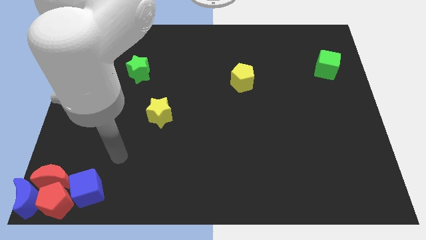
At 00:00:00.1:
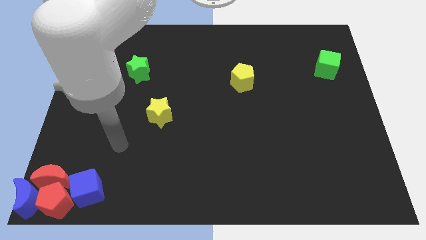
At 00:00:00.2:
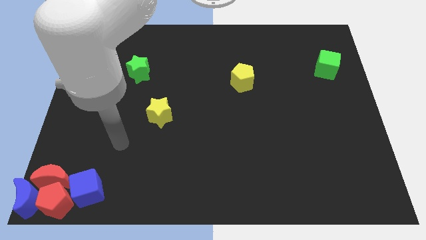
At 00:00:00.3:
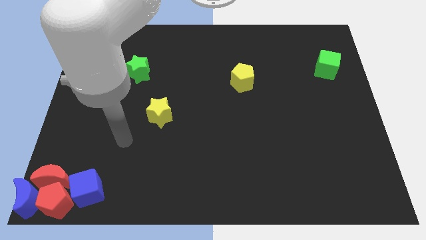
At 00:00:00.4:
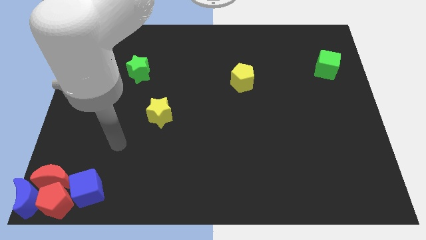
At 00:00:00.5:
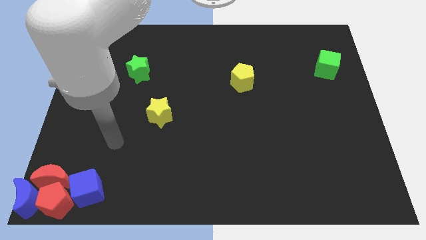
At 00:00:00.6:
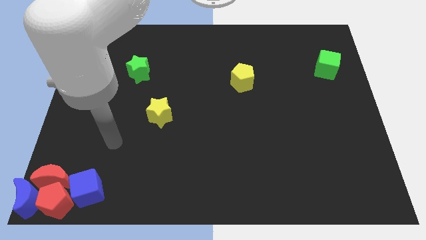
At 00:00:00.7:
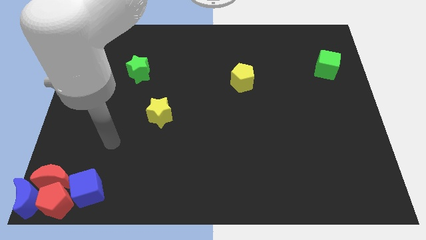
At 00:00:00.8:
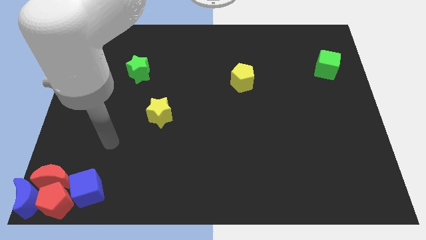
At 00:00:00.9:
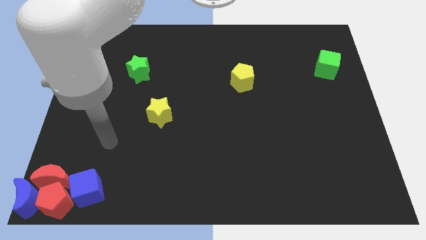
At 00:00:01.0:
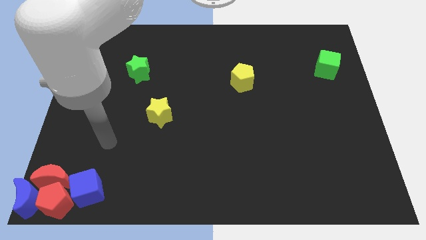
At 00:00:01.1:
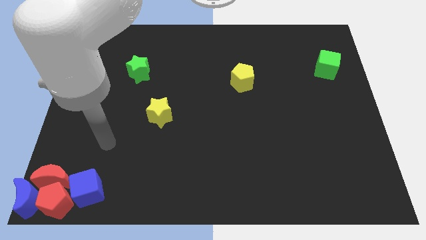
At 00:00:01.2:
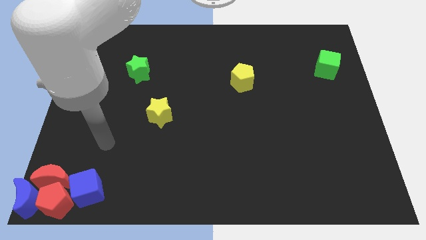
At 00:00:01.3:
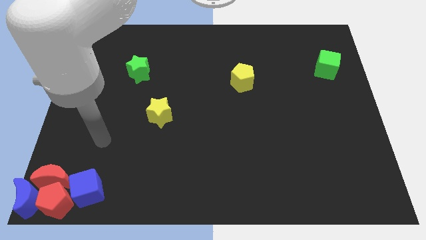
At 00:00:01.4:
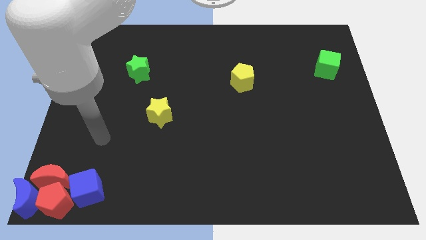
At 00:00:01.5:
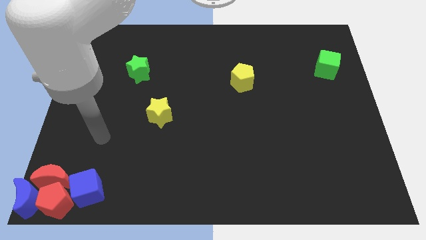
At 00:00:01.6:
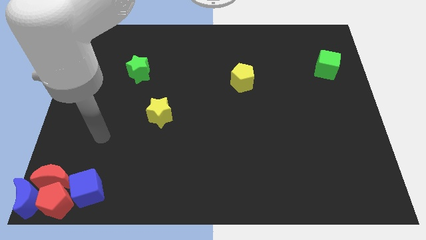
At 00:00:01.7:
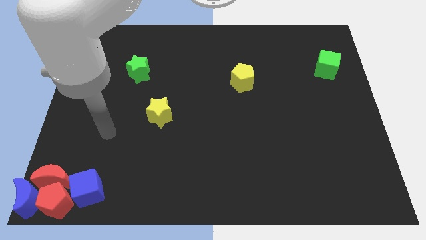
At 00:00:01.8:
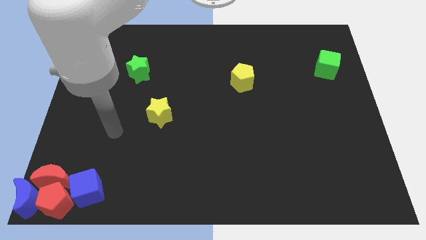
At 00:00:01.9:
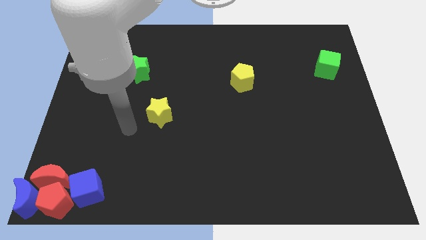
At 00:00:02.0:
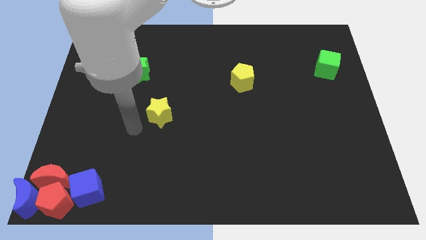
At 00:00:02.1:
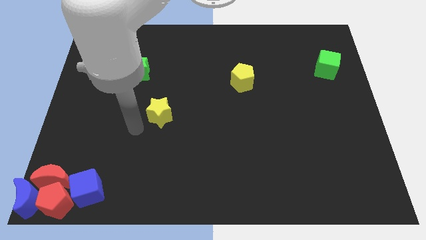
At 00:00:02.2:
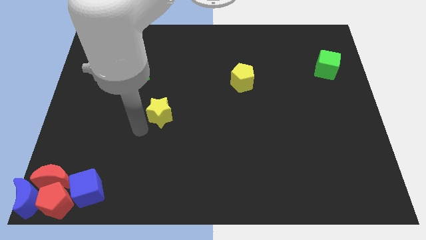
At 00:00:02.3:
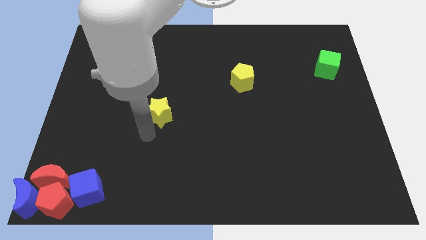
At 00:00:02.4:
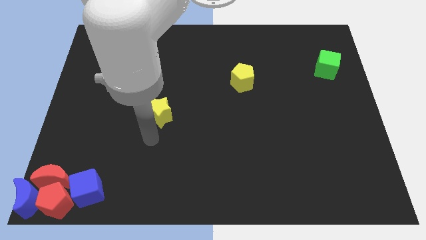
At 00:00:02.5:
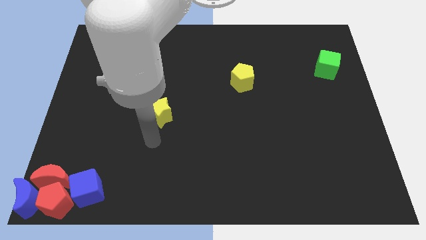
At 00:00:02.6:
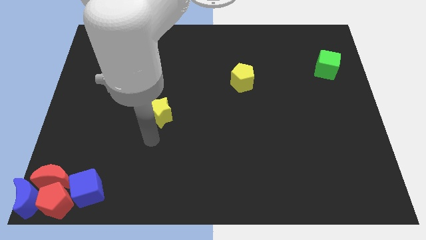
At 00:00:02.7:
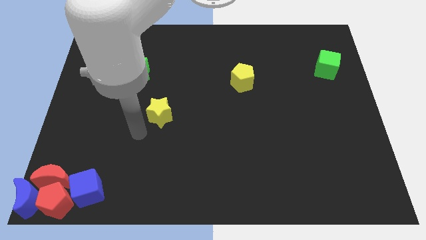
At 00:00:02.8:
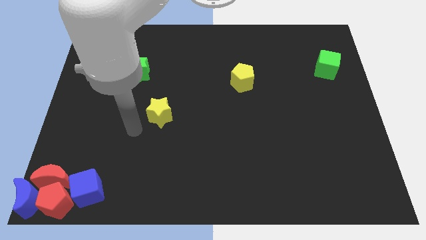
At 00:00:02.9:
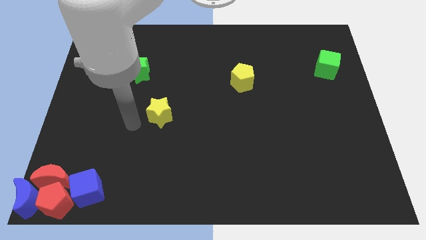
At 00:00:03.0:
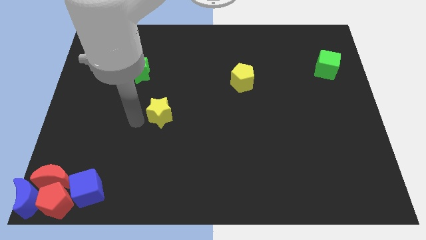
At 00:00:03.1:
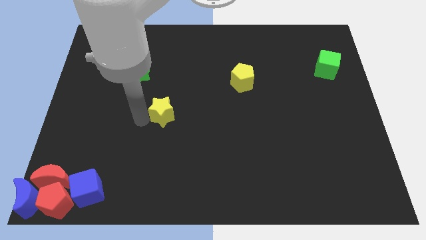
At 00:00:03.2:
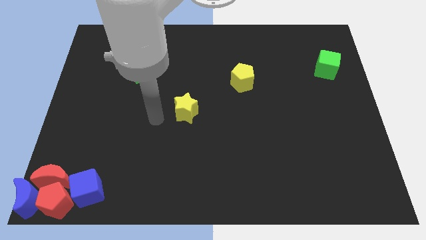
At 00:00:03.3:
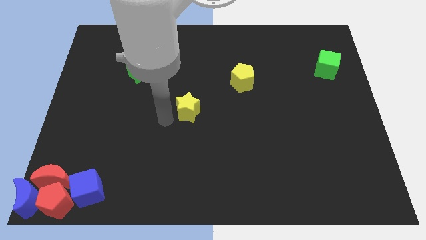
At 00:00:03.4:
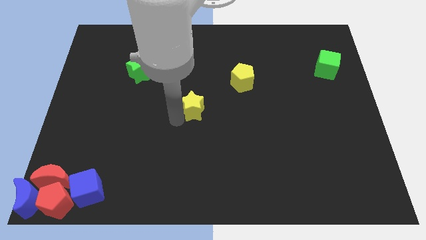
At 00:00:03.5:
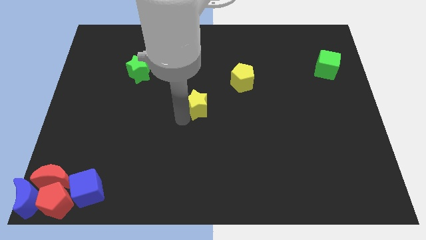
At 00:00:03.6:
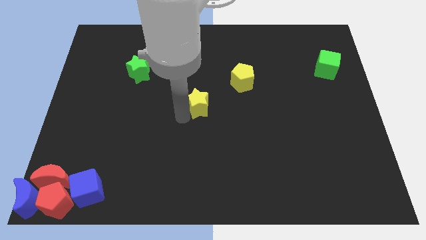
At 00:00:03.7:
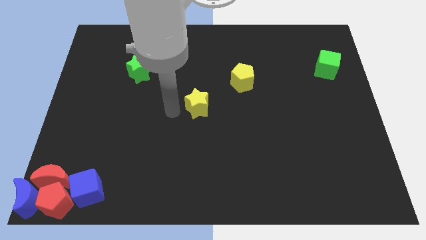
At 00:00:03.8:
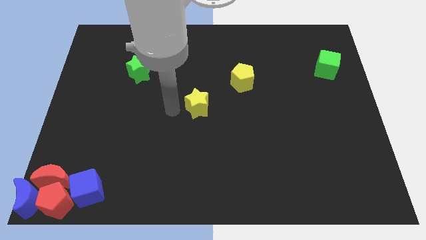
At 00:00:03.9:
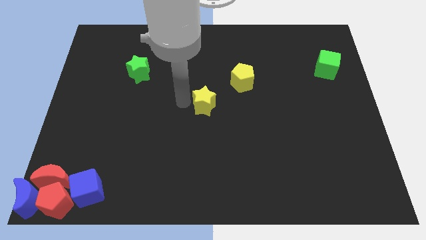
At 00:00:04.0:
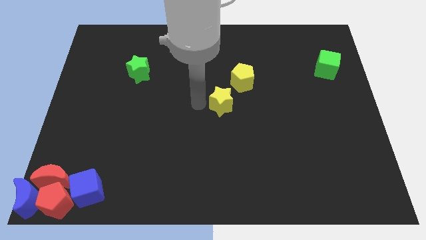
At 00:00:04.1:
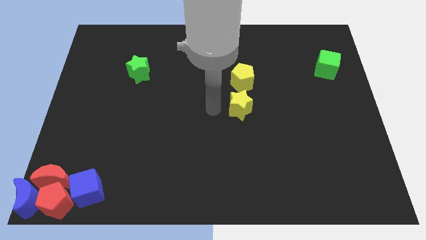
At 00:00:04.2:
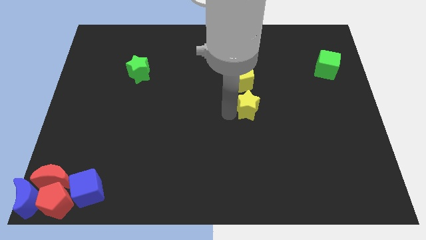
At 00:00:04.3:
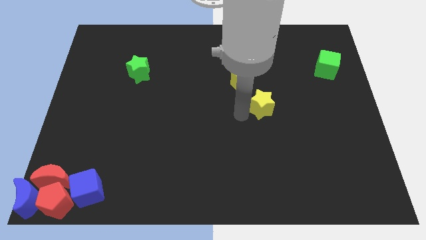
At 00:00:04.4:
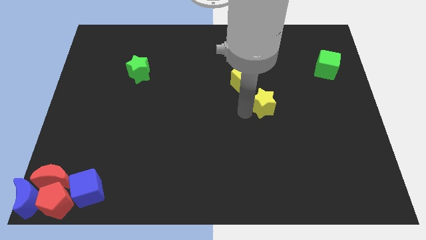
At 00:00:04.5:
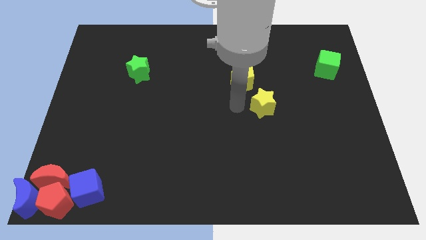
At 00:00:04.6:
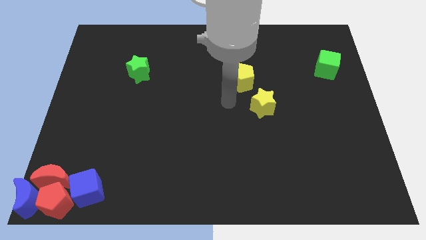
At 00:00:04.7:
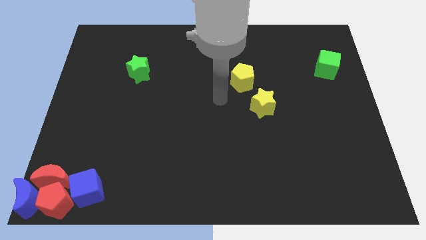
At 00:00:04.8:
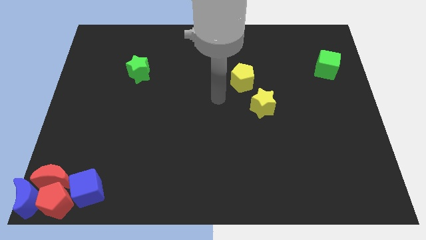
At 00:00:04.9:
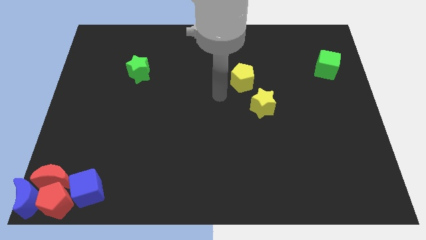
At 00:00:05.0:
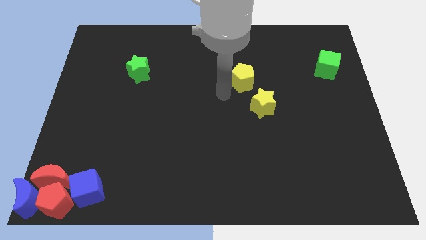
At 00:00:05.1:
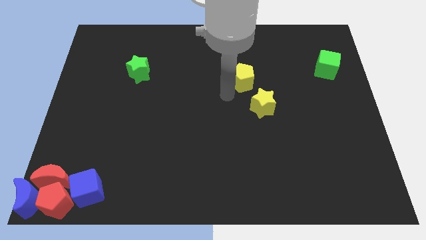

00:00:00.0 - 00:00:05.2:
place the yellow star below the yellow pentagon

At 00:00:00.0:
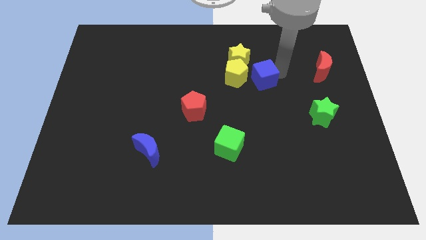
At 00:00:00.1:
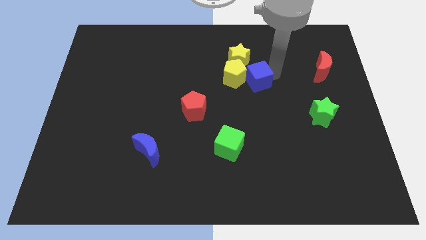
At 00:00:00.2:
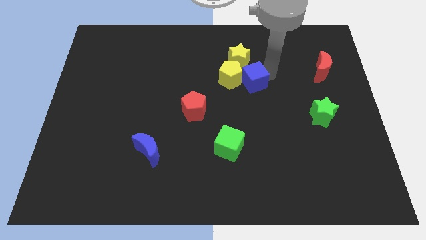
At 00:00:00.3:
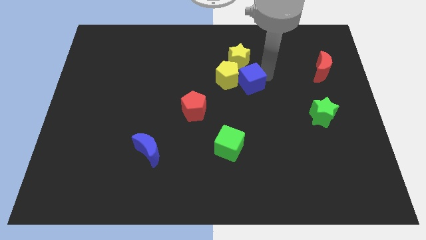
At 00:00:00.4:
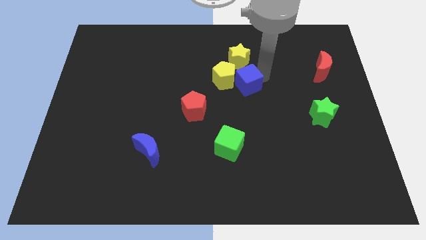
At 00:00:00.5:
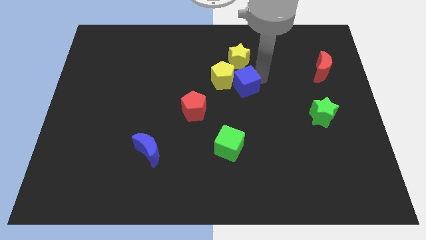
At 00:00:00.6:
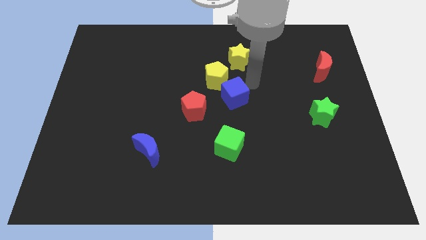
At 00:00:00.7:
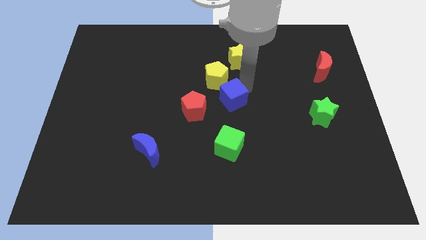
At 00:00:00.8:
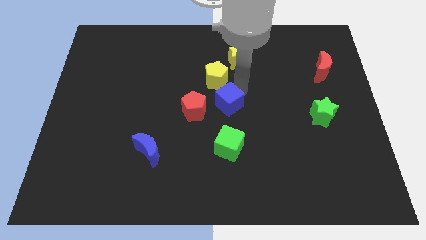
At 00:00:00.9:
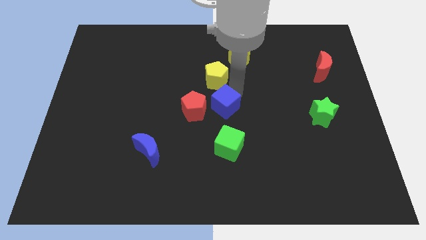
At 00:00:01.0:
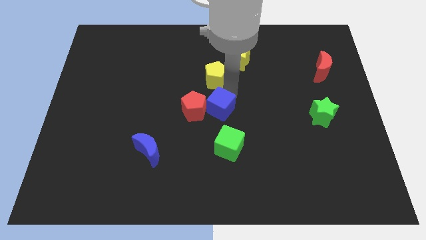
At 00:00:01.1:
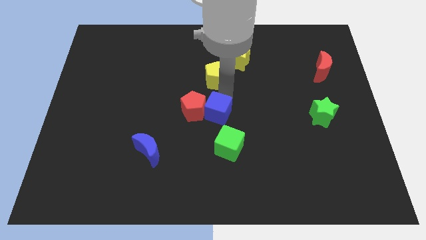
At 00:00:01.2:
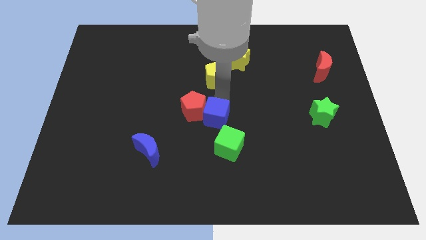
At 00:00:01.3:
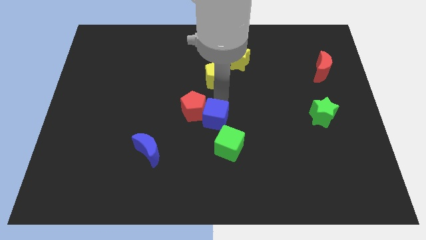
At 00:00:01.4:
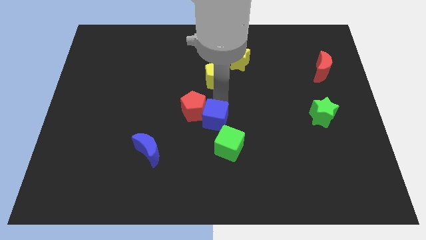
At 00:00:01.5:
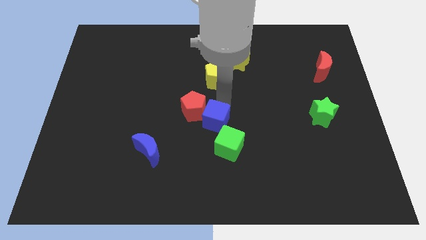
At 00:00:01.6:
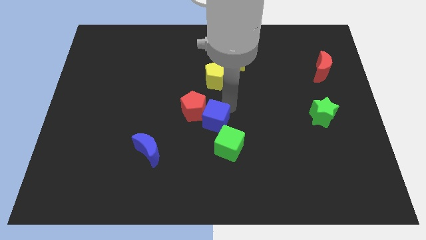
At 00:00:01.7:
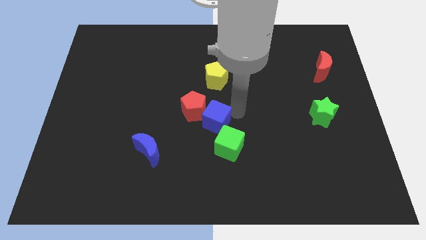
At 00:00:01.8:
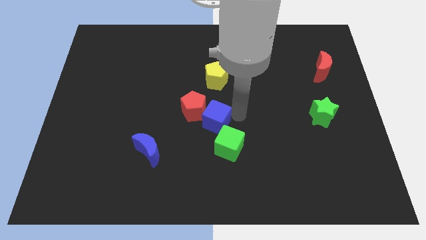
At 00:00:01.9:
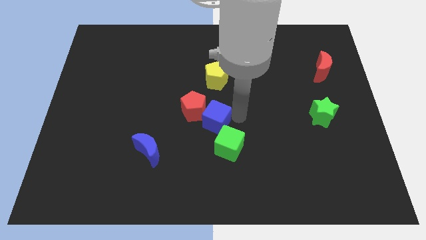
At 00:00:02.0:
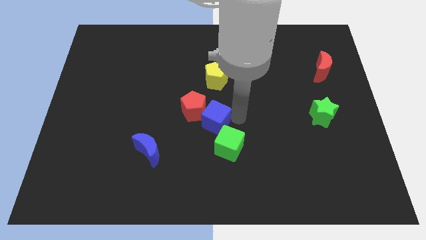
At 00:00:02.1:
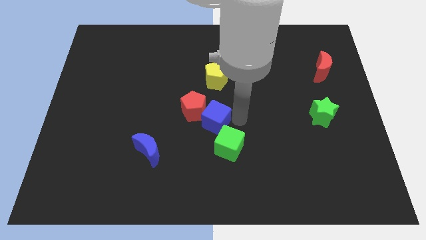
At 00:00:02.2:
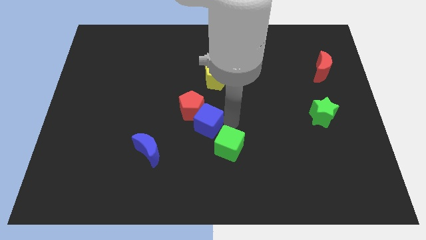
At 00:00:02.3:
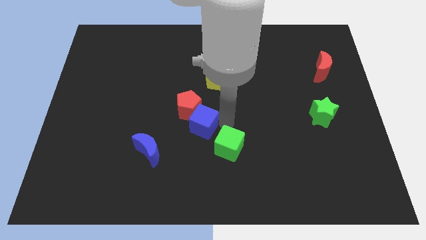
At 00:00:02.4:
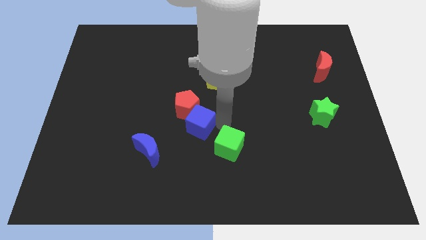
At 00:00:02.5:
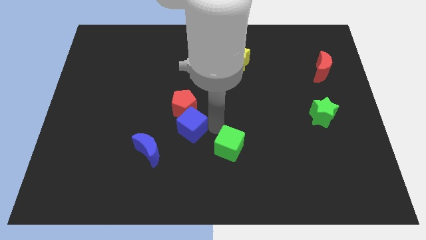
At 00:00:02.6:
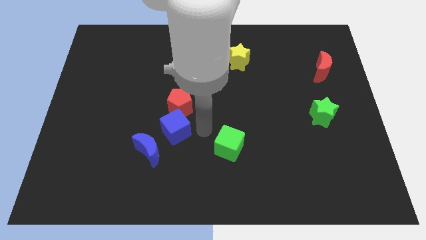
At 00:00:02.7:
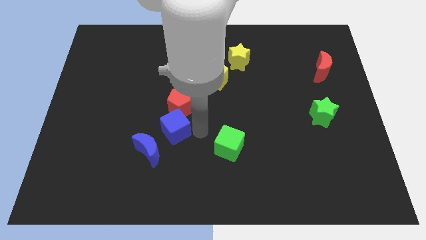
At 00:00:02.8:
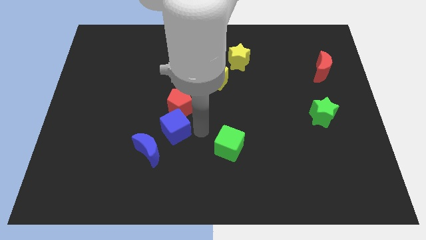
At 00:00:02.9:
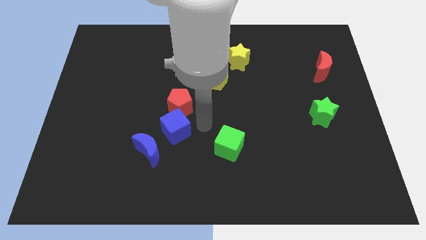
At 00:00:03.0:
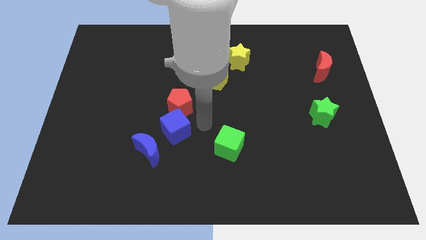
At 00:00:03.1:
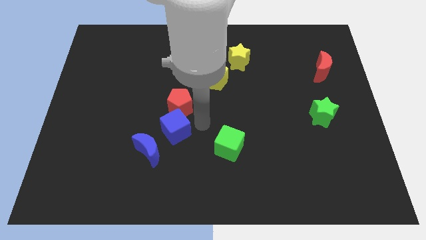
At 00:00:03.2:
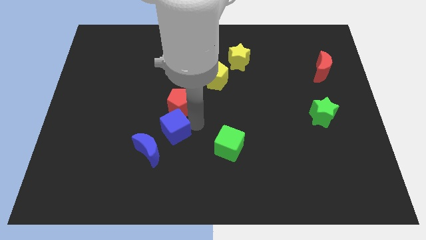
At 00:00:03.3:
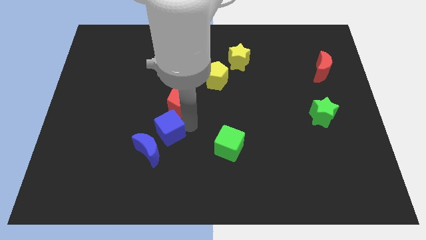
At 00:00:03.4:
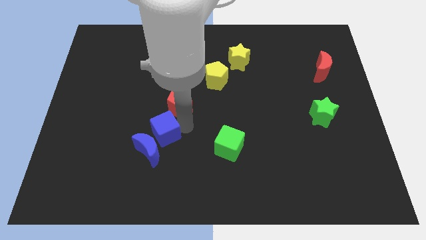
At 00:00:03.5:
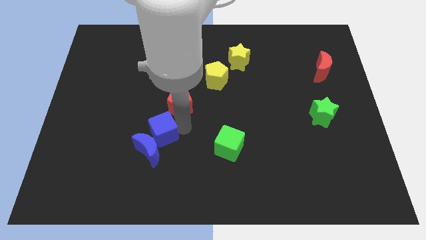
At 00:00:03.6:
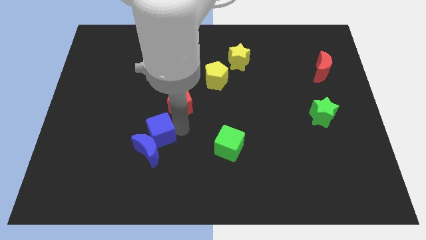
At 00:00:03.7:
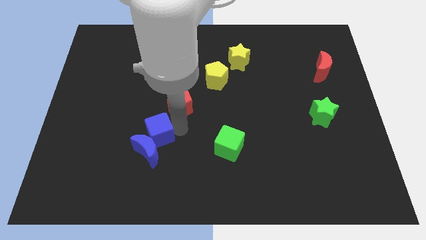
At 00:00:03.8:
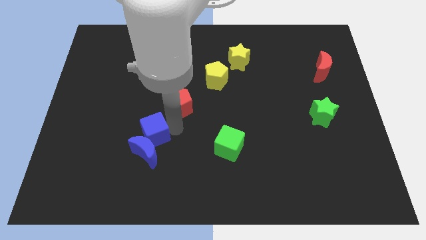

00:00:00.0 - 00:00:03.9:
push the blue cube into blue crescent
